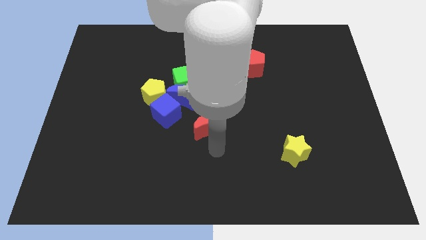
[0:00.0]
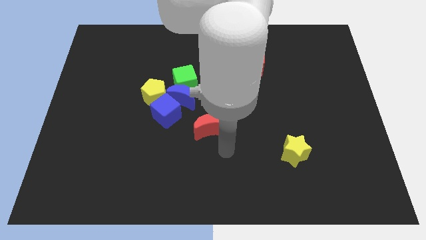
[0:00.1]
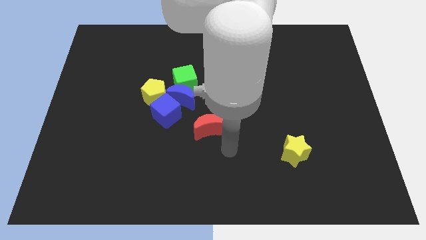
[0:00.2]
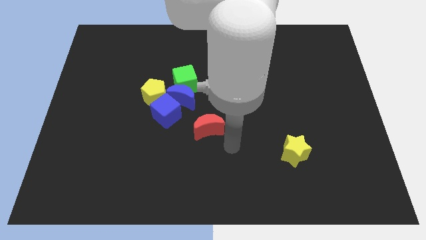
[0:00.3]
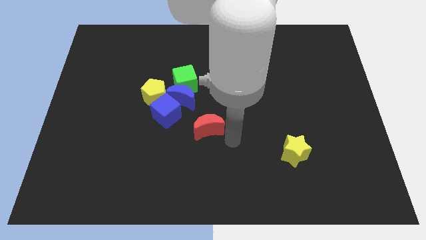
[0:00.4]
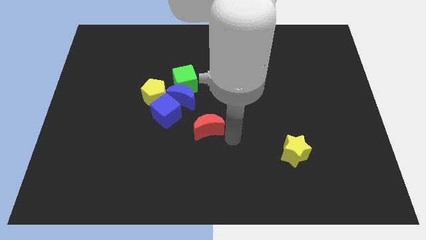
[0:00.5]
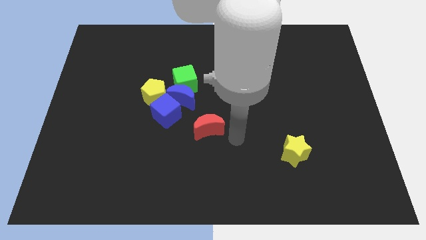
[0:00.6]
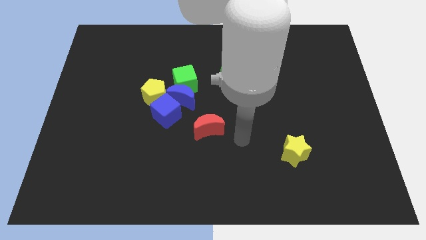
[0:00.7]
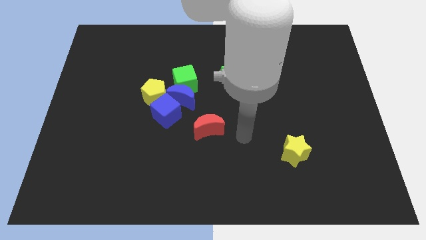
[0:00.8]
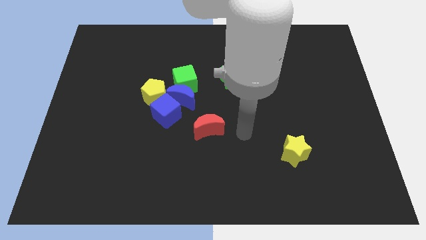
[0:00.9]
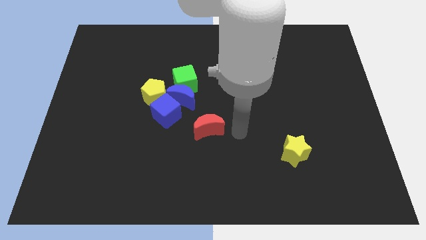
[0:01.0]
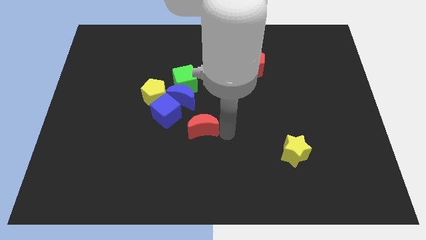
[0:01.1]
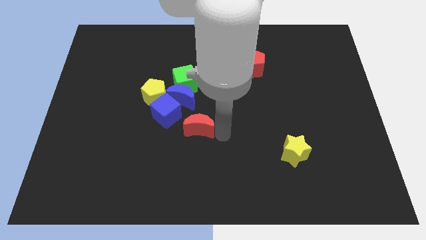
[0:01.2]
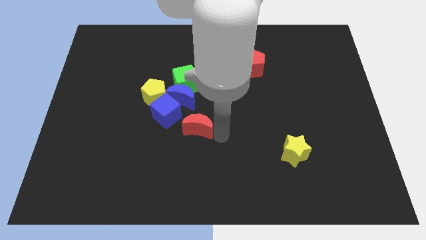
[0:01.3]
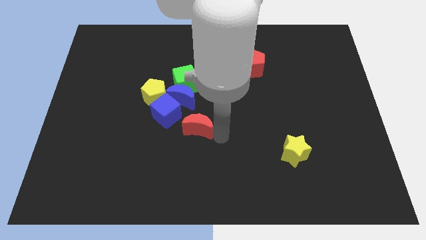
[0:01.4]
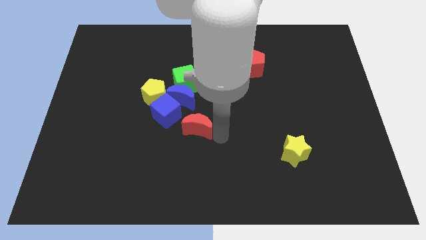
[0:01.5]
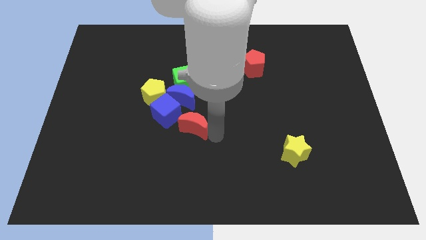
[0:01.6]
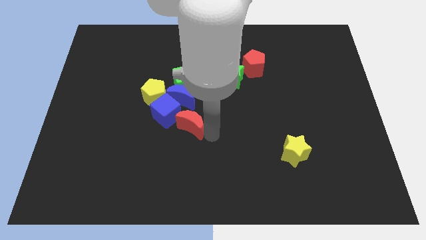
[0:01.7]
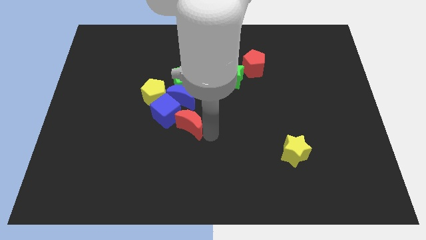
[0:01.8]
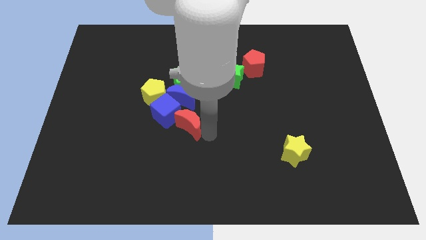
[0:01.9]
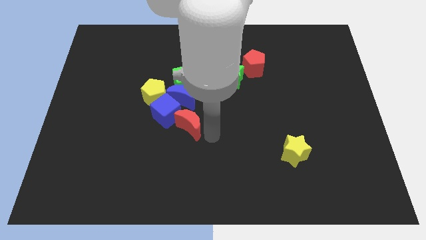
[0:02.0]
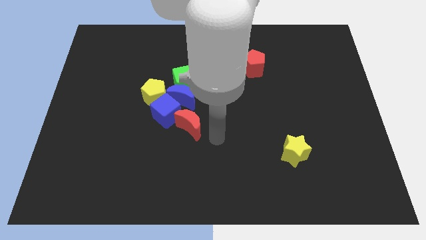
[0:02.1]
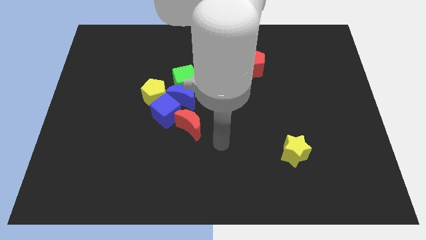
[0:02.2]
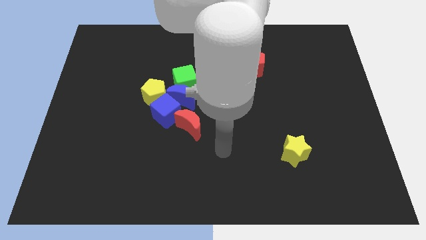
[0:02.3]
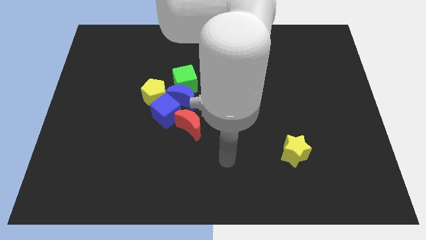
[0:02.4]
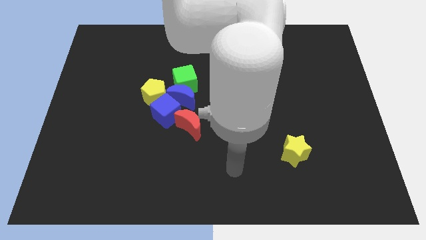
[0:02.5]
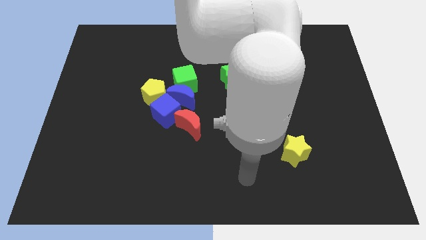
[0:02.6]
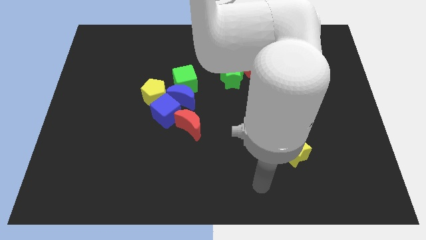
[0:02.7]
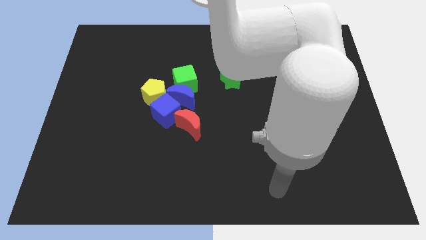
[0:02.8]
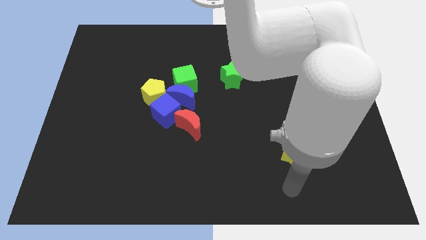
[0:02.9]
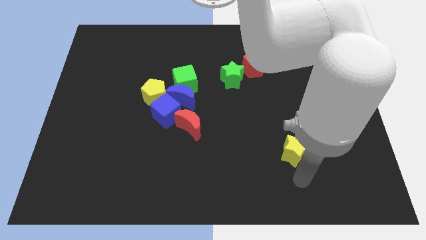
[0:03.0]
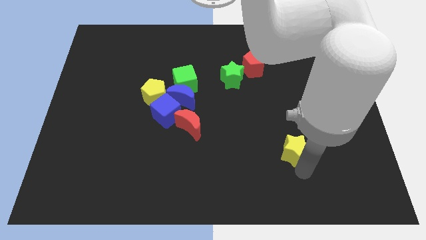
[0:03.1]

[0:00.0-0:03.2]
place the red moon diagonal to the blue cube

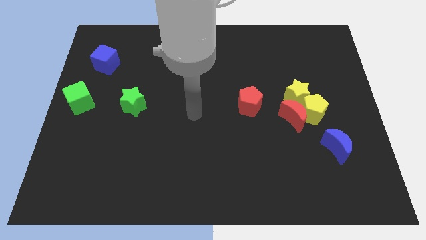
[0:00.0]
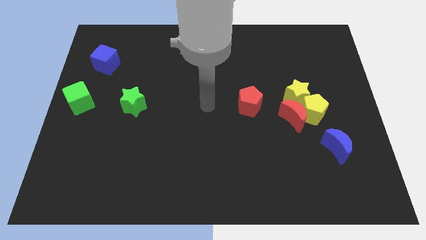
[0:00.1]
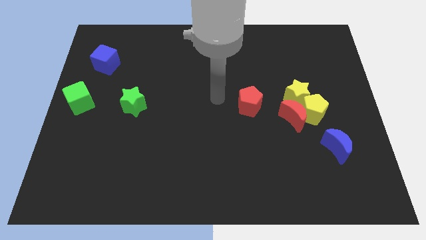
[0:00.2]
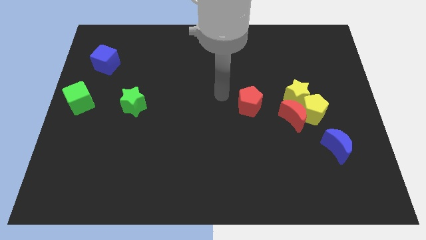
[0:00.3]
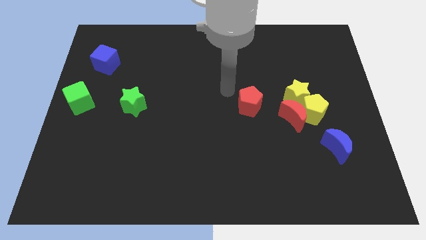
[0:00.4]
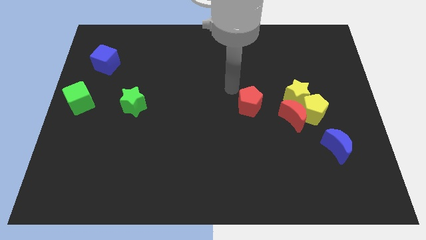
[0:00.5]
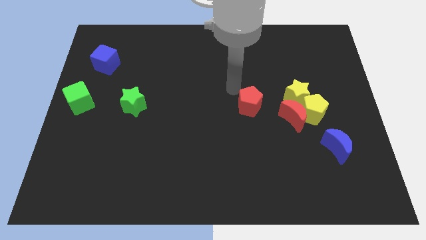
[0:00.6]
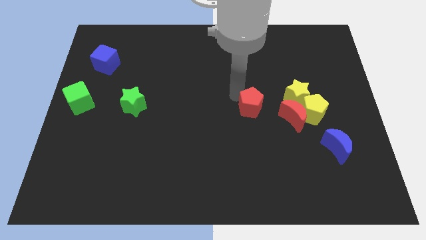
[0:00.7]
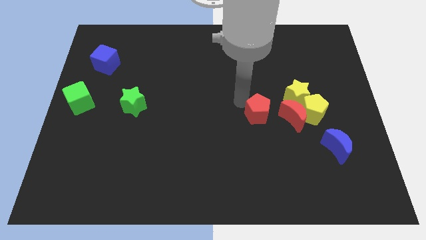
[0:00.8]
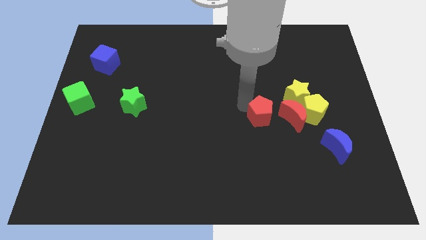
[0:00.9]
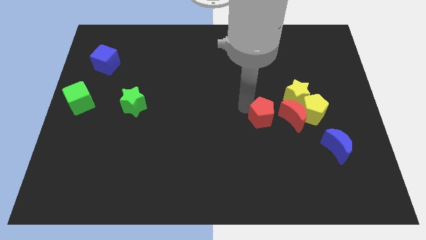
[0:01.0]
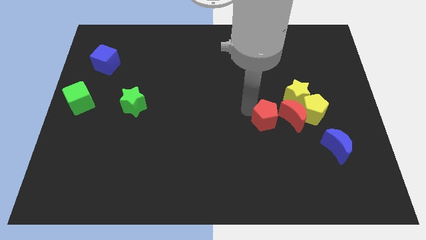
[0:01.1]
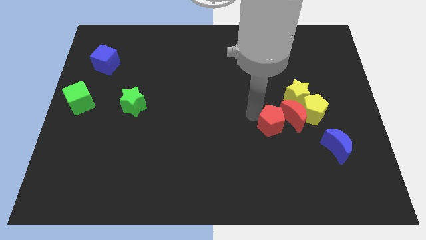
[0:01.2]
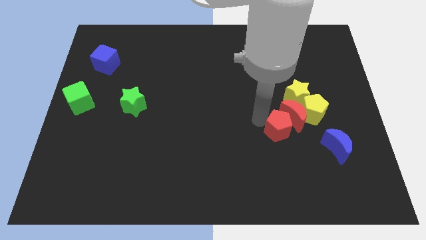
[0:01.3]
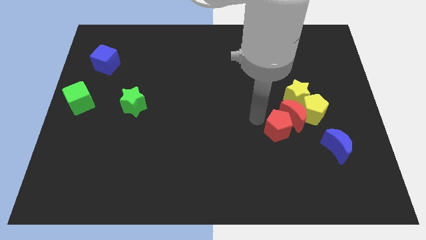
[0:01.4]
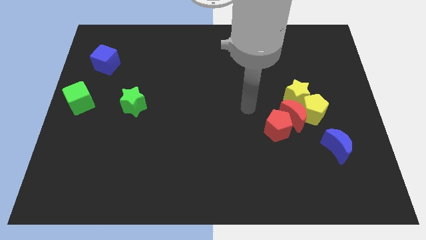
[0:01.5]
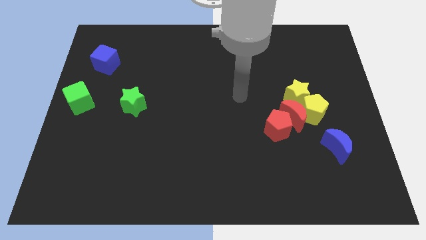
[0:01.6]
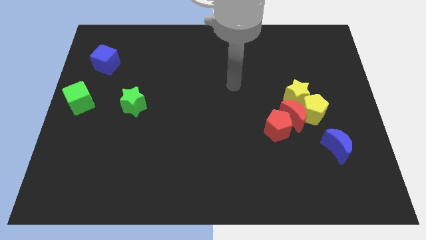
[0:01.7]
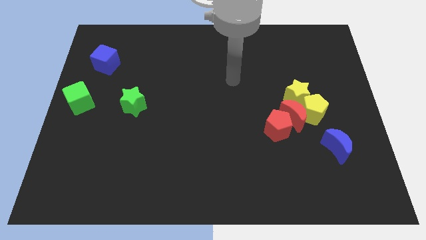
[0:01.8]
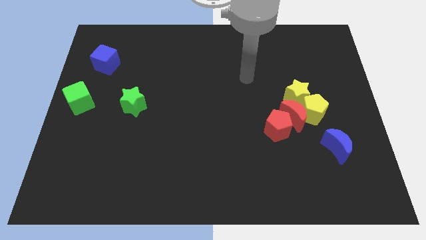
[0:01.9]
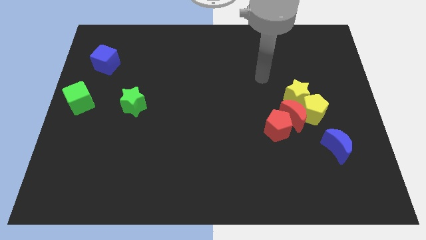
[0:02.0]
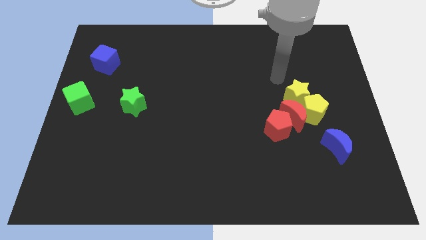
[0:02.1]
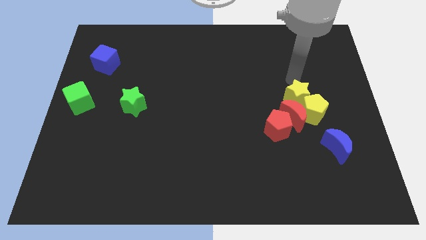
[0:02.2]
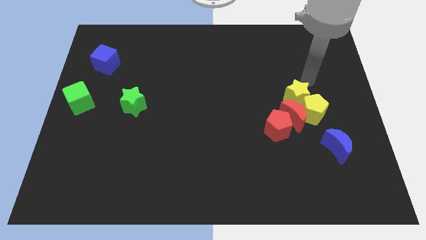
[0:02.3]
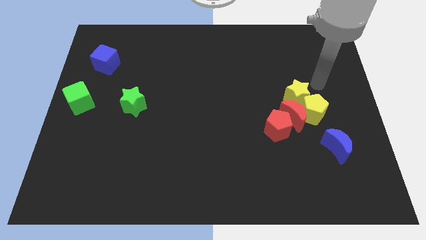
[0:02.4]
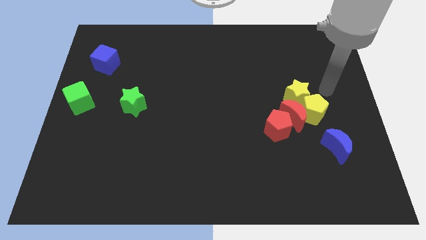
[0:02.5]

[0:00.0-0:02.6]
push the red pentagon into the red moon

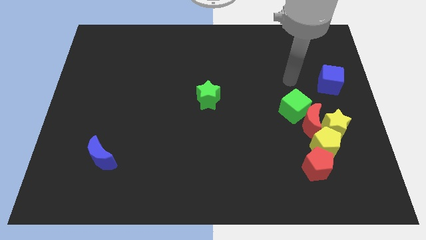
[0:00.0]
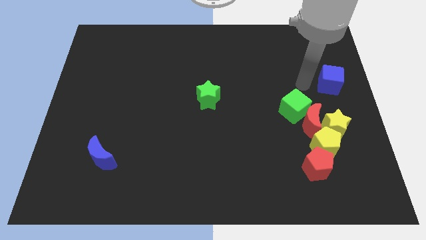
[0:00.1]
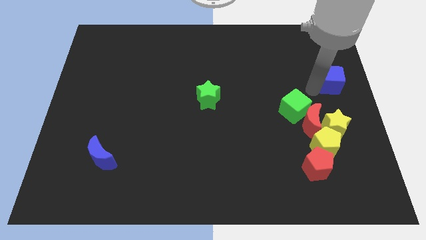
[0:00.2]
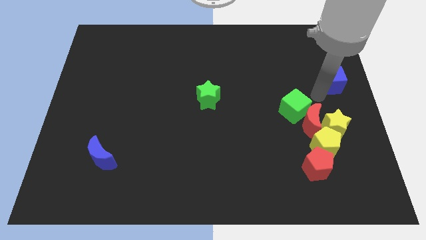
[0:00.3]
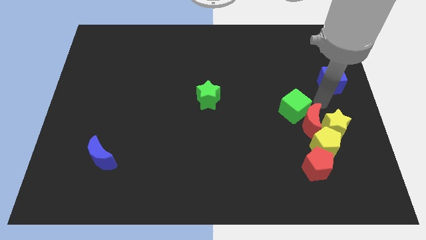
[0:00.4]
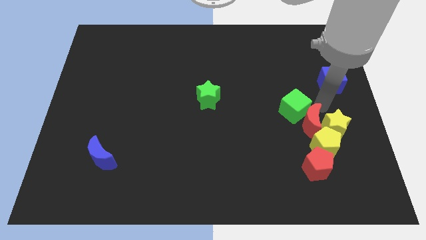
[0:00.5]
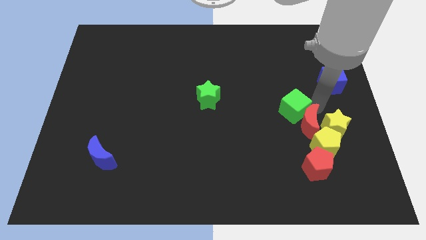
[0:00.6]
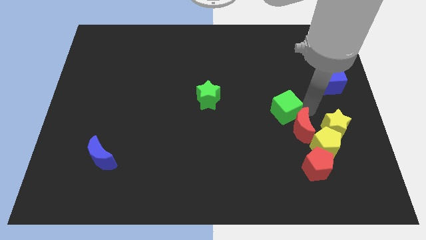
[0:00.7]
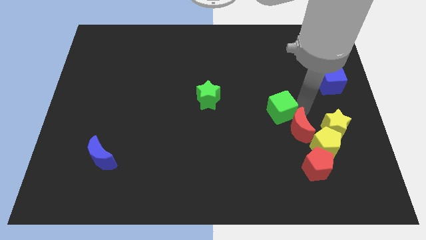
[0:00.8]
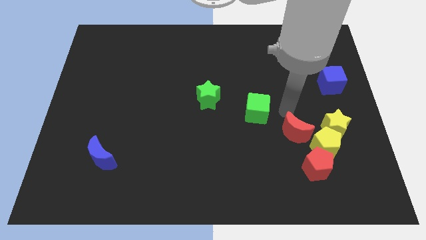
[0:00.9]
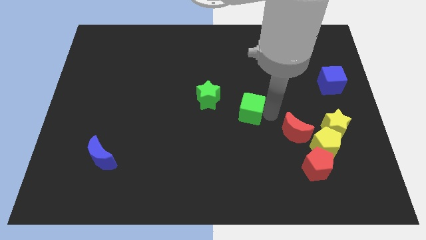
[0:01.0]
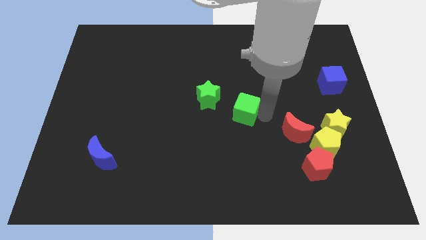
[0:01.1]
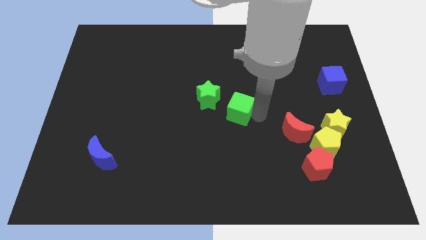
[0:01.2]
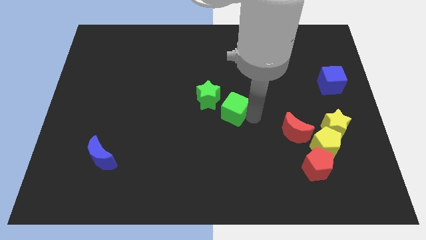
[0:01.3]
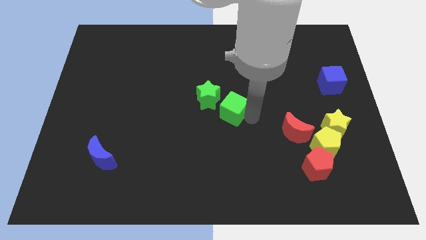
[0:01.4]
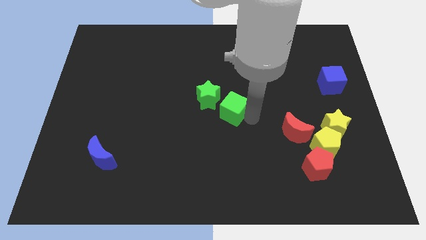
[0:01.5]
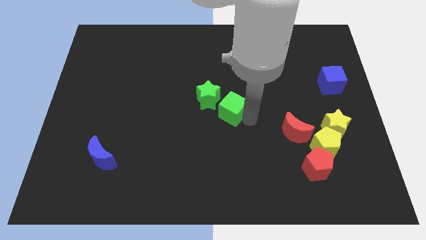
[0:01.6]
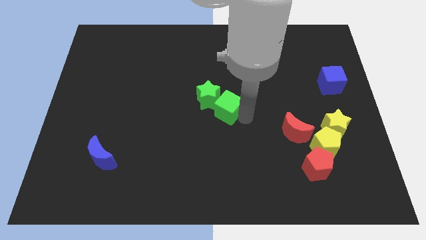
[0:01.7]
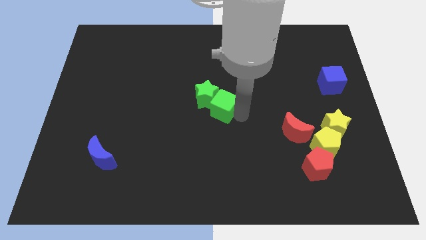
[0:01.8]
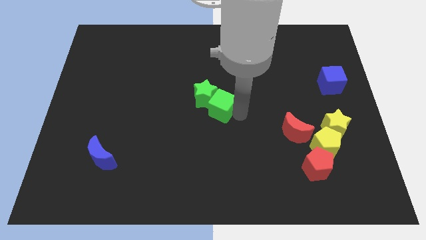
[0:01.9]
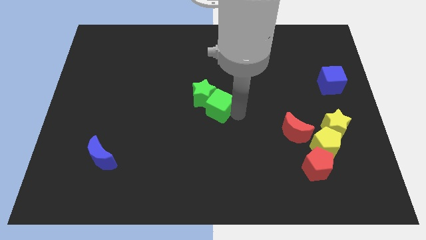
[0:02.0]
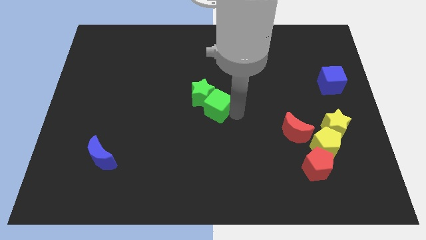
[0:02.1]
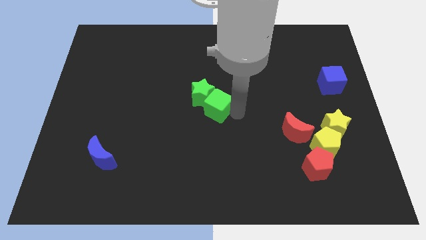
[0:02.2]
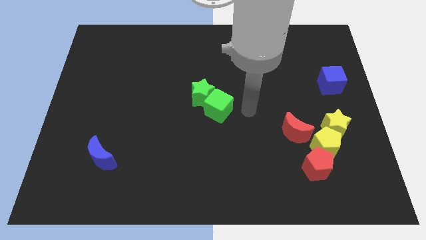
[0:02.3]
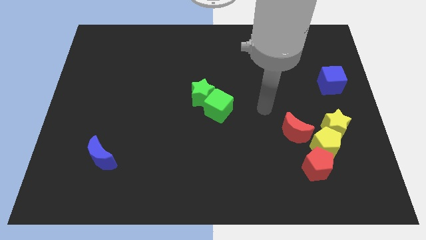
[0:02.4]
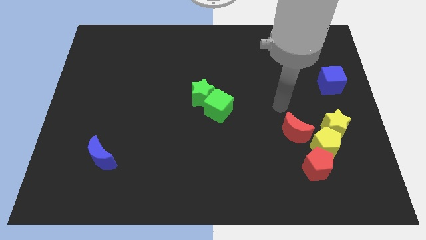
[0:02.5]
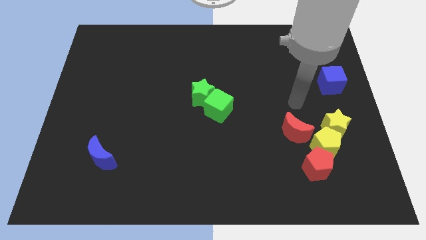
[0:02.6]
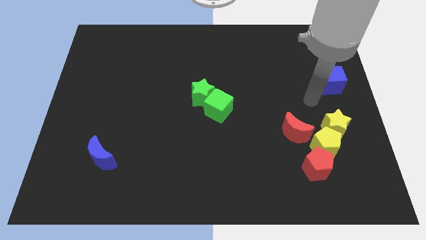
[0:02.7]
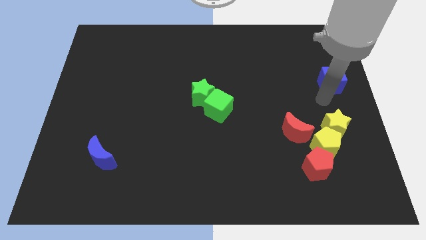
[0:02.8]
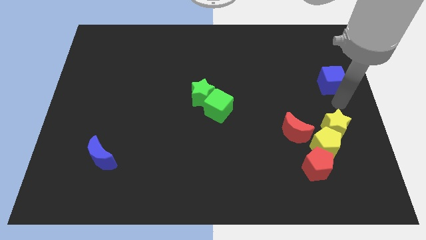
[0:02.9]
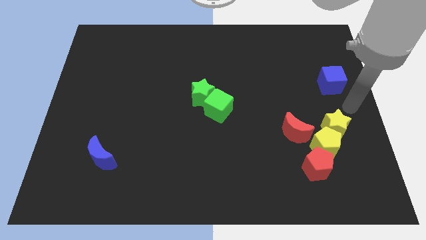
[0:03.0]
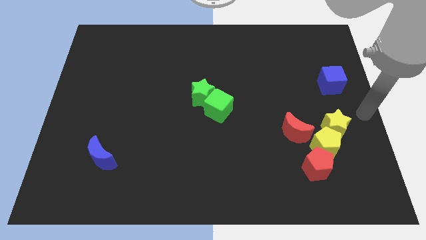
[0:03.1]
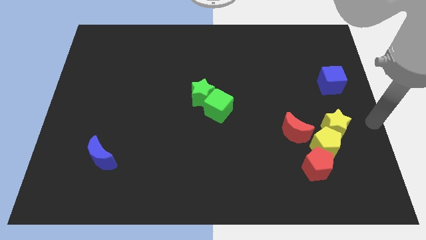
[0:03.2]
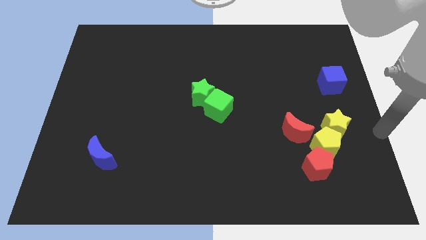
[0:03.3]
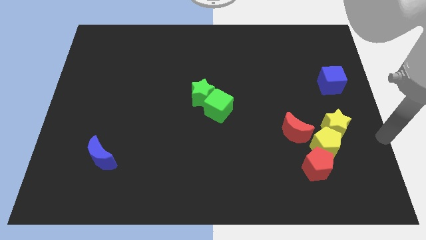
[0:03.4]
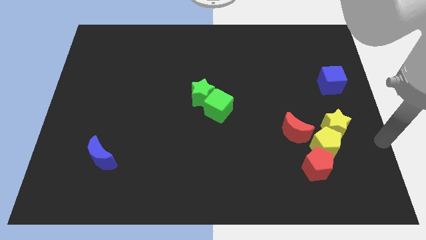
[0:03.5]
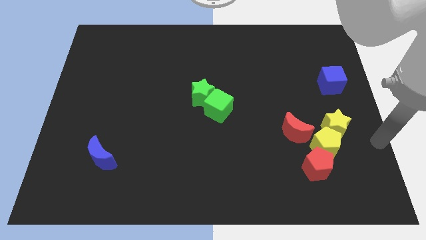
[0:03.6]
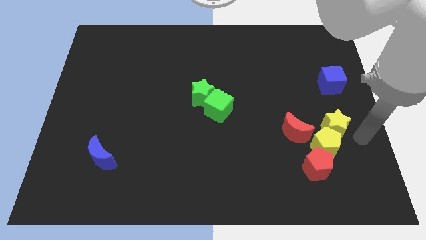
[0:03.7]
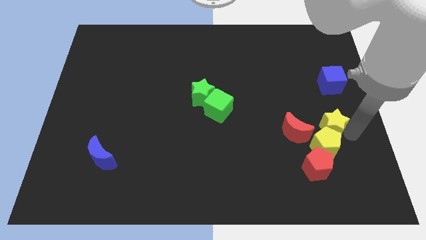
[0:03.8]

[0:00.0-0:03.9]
move the green cube away from the red crescent
